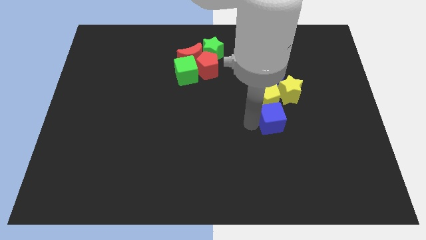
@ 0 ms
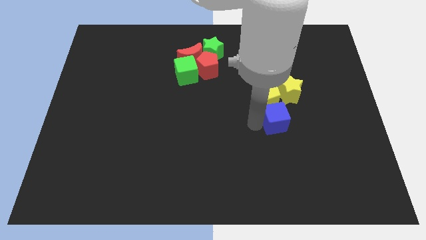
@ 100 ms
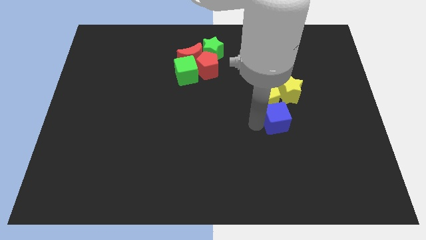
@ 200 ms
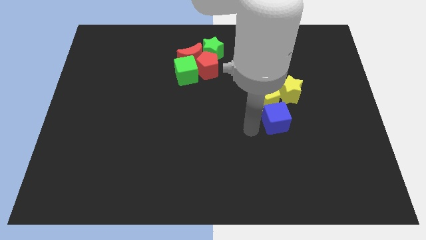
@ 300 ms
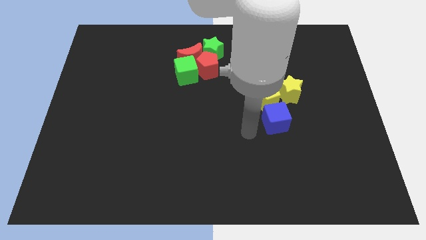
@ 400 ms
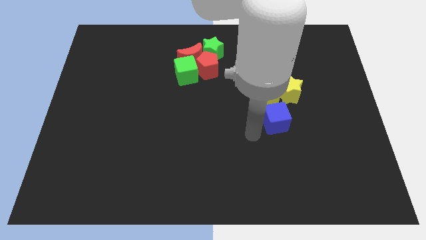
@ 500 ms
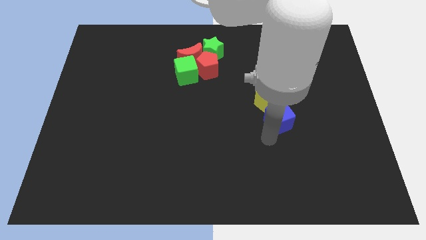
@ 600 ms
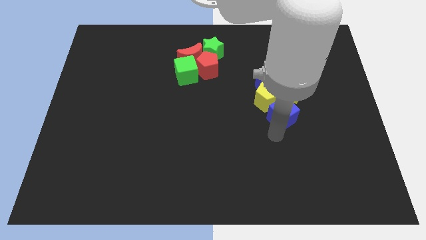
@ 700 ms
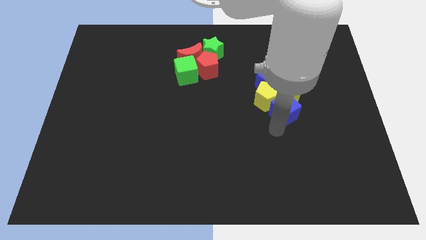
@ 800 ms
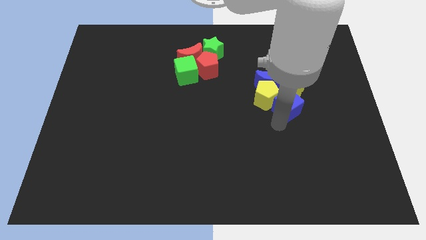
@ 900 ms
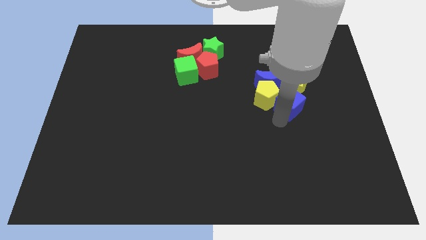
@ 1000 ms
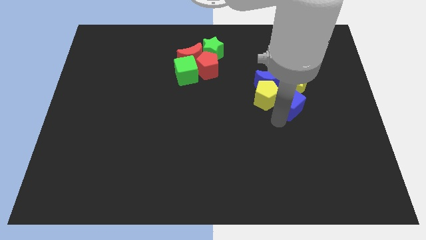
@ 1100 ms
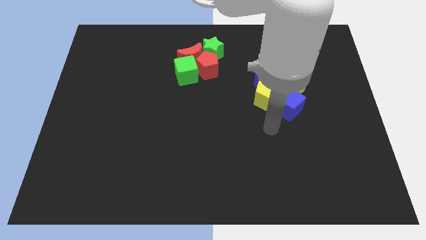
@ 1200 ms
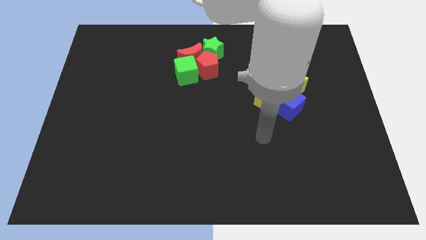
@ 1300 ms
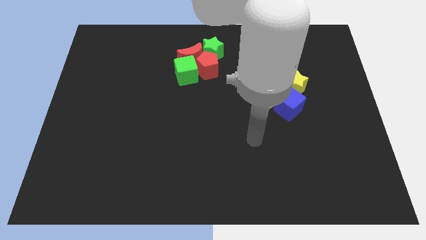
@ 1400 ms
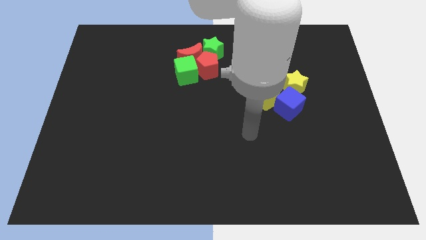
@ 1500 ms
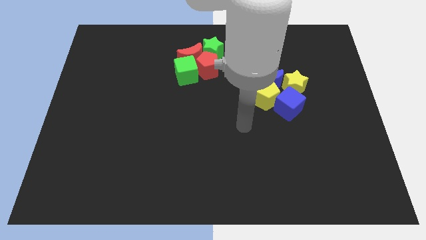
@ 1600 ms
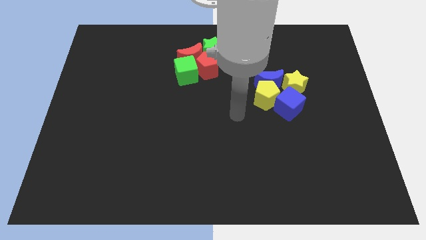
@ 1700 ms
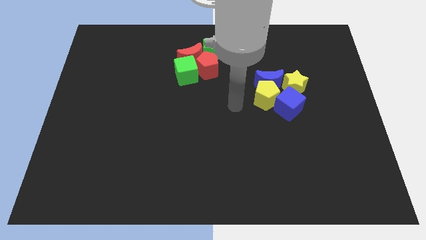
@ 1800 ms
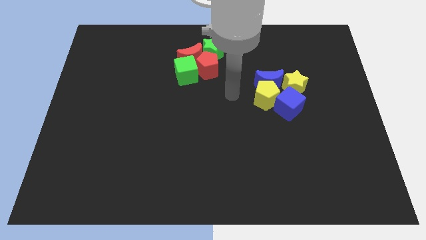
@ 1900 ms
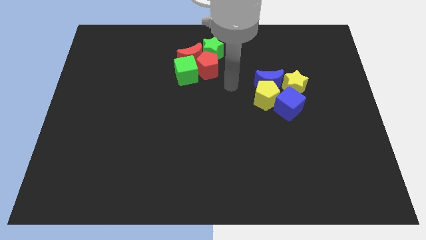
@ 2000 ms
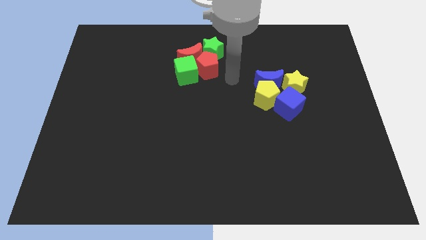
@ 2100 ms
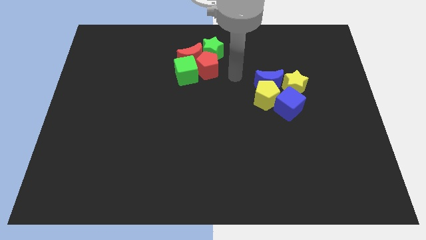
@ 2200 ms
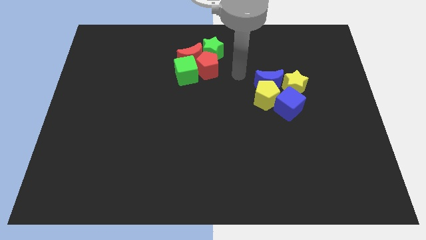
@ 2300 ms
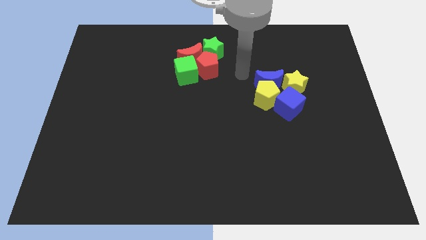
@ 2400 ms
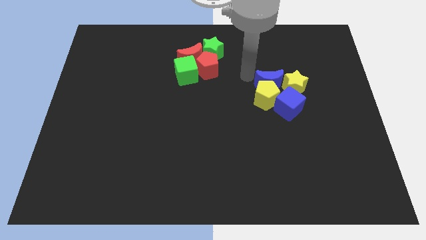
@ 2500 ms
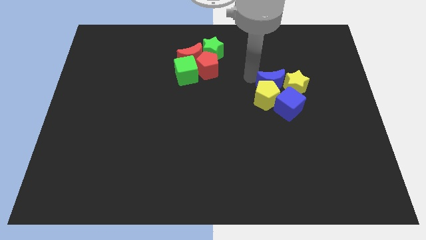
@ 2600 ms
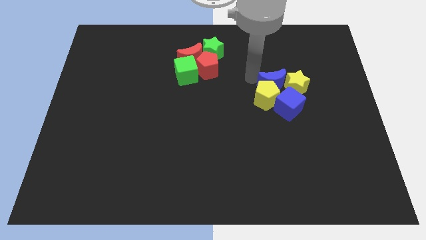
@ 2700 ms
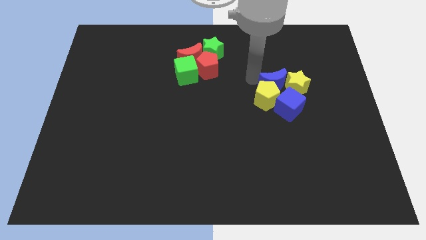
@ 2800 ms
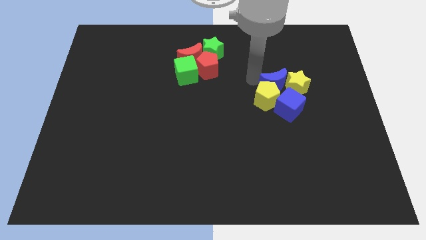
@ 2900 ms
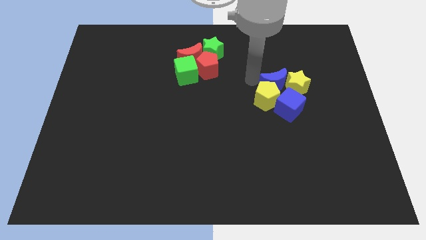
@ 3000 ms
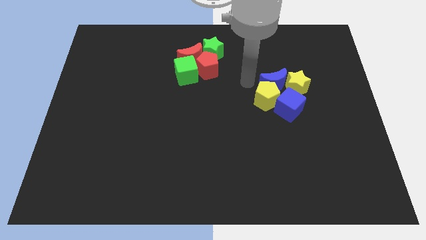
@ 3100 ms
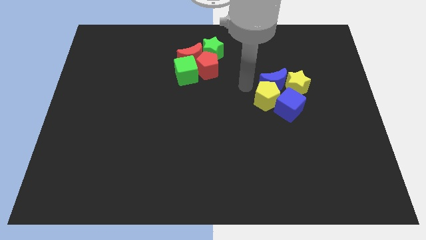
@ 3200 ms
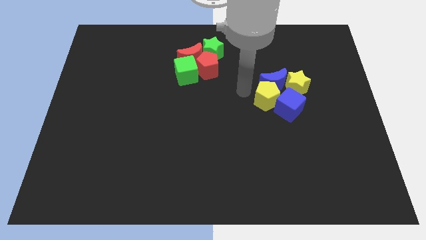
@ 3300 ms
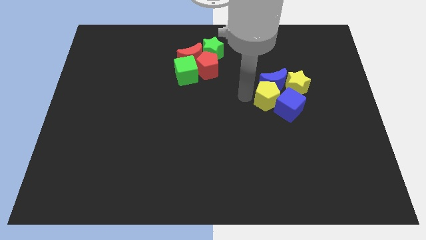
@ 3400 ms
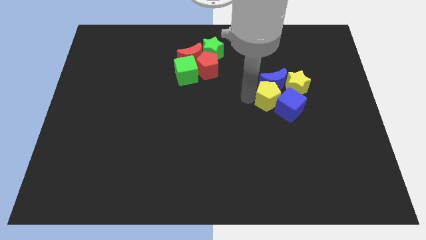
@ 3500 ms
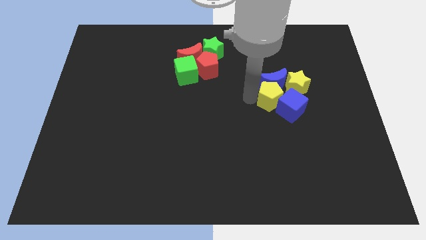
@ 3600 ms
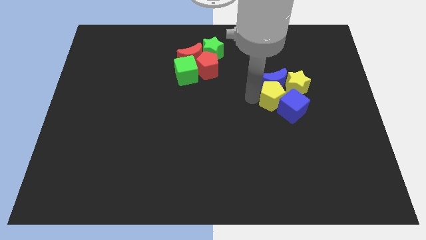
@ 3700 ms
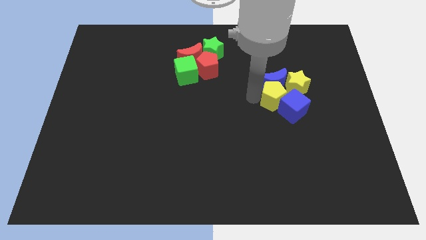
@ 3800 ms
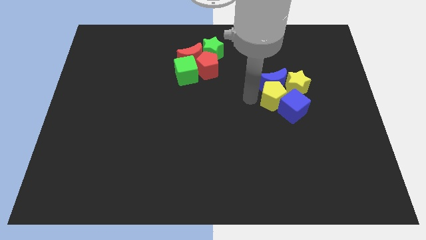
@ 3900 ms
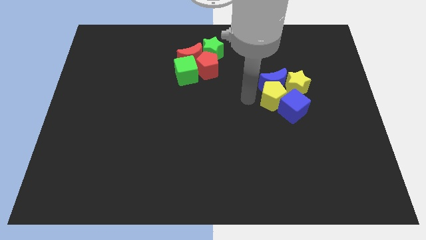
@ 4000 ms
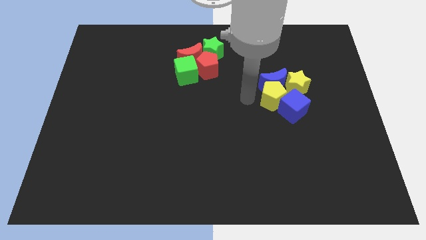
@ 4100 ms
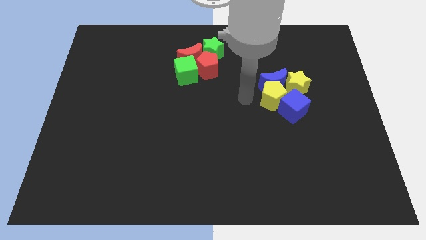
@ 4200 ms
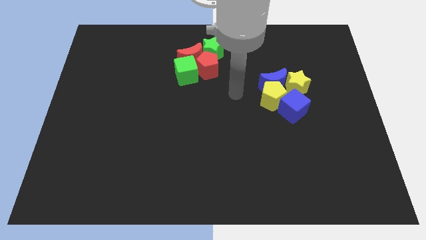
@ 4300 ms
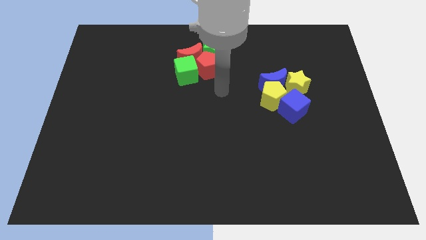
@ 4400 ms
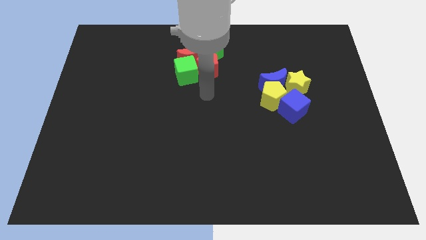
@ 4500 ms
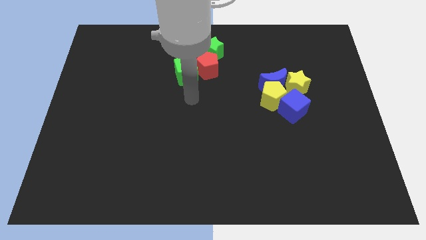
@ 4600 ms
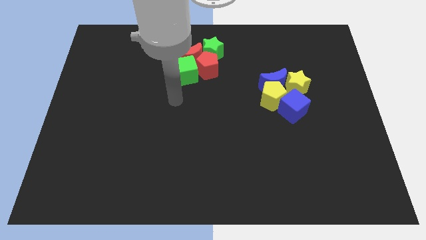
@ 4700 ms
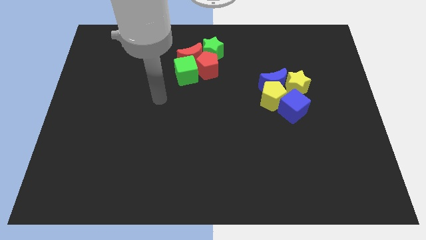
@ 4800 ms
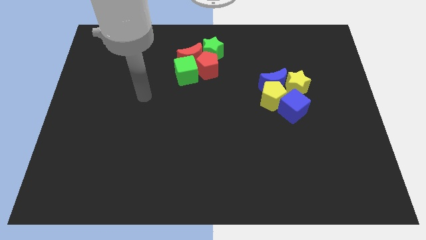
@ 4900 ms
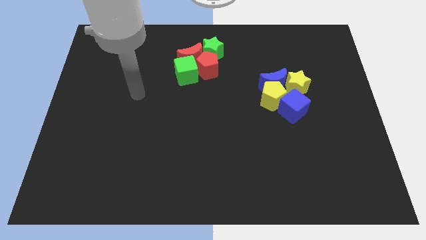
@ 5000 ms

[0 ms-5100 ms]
adjust the blue and the yellow blocks

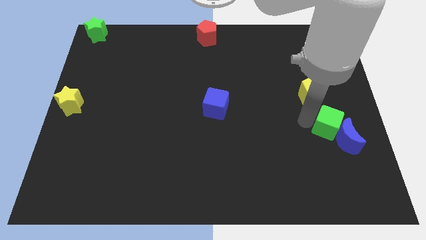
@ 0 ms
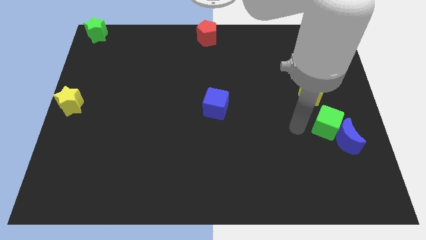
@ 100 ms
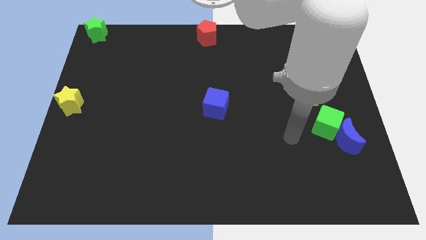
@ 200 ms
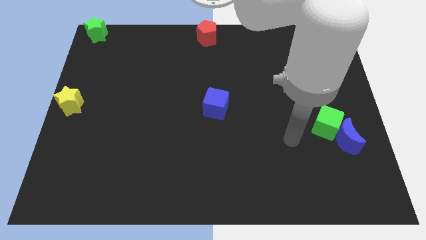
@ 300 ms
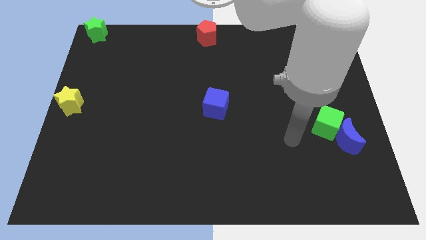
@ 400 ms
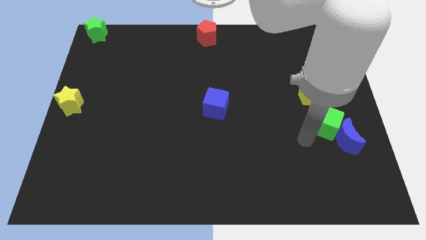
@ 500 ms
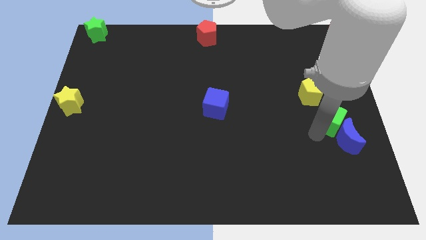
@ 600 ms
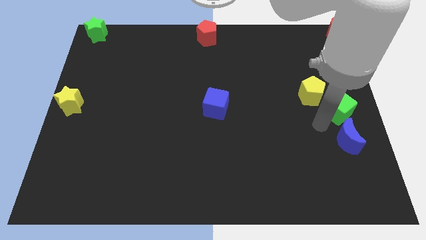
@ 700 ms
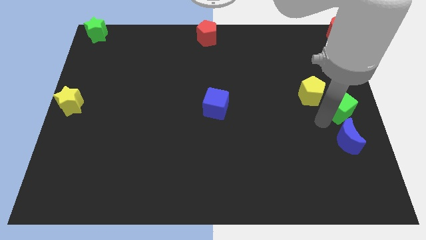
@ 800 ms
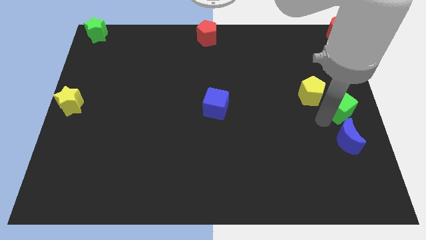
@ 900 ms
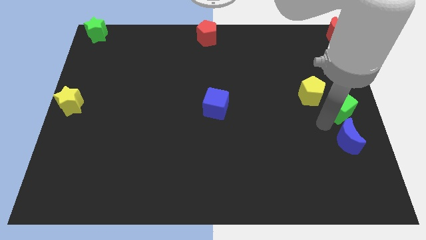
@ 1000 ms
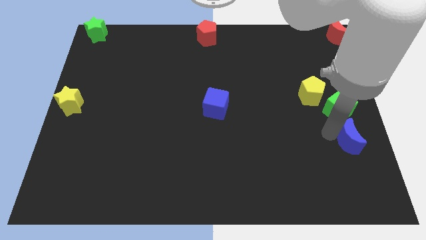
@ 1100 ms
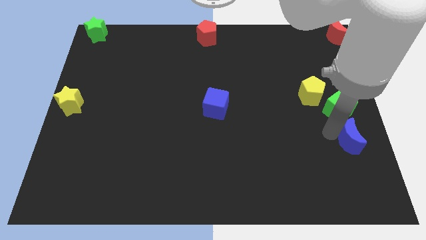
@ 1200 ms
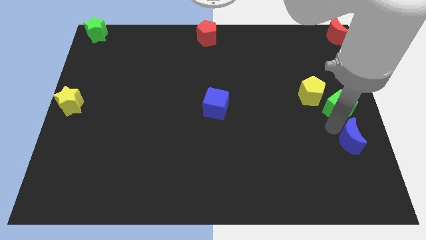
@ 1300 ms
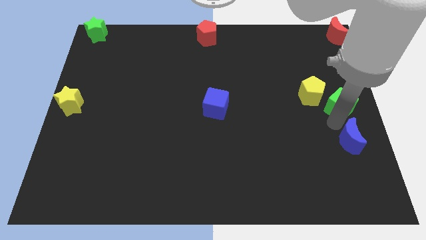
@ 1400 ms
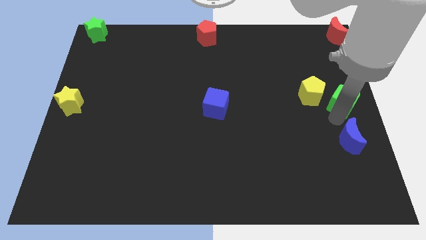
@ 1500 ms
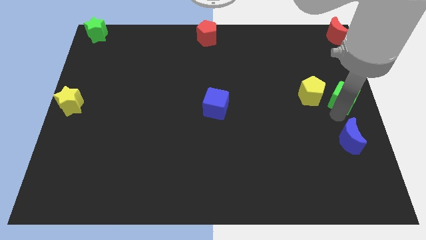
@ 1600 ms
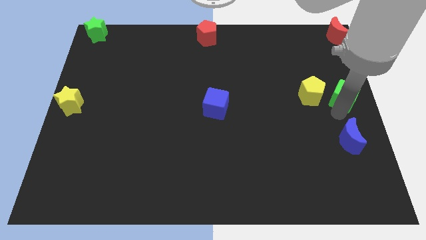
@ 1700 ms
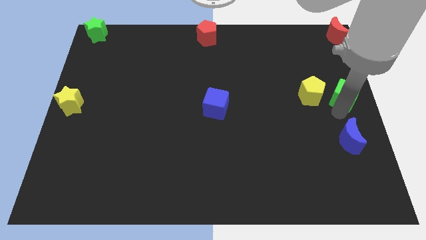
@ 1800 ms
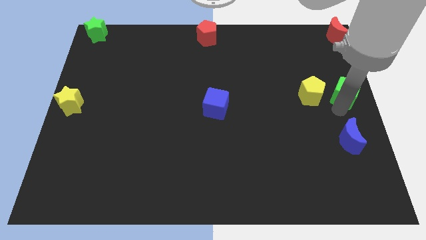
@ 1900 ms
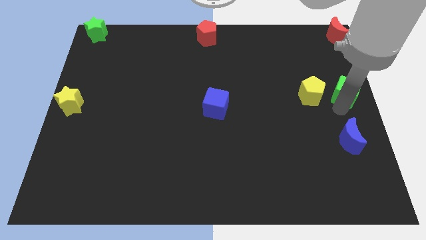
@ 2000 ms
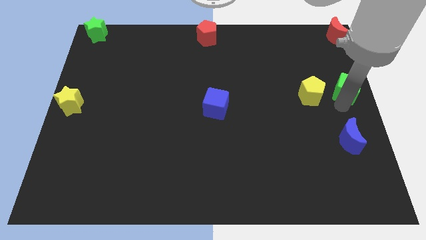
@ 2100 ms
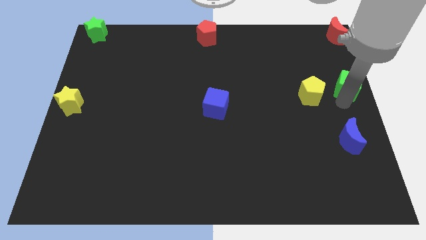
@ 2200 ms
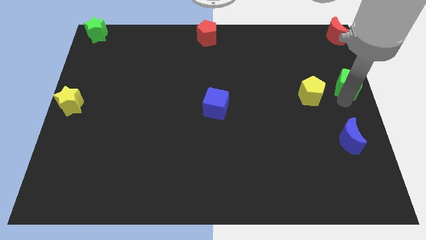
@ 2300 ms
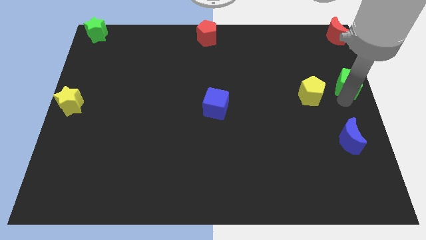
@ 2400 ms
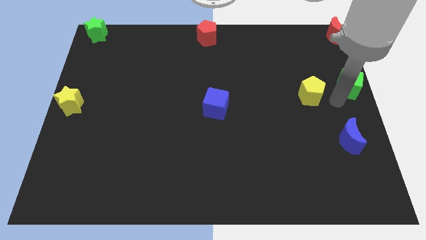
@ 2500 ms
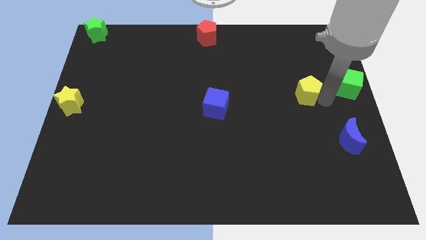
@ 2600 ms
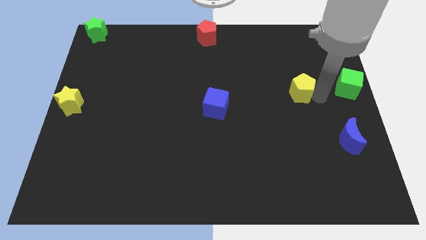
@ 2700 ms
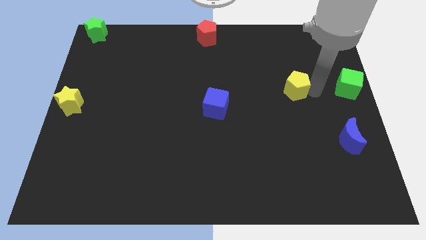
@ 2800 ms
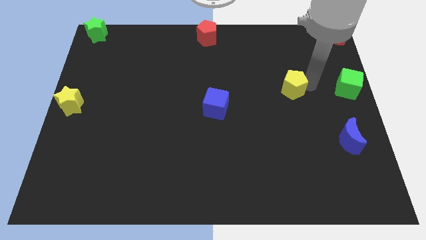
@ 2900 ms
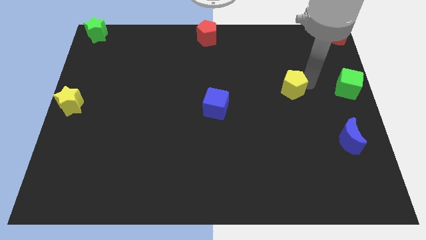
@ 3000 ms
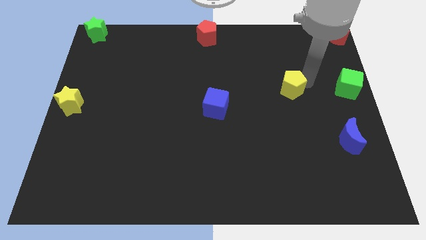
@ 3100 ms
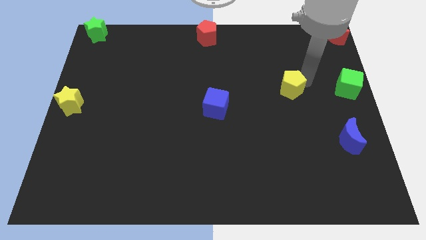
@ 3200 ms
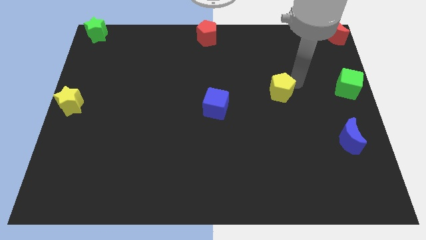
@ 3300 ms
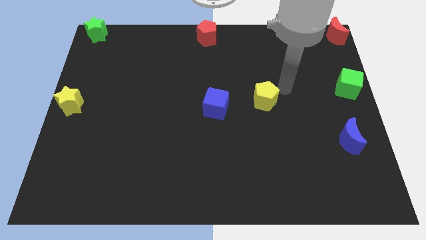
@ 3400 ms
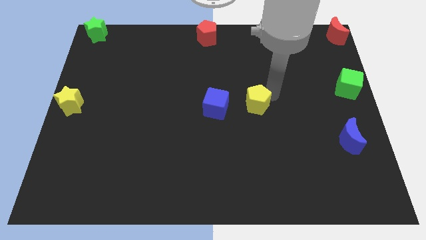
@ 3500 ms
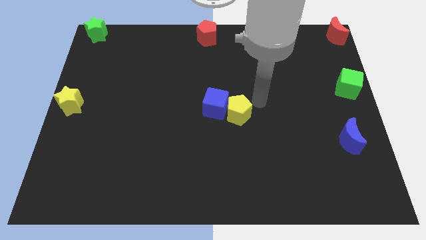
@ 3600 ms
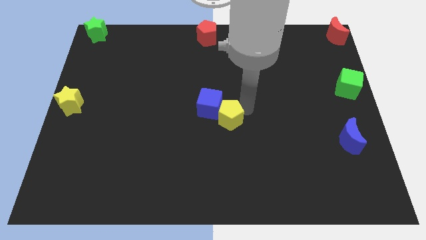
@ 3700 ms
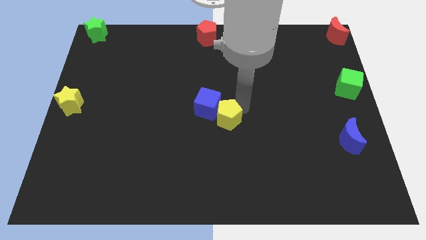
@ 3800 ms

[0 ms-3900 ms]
move yellow pentagon to the right of blue cube
